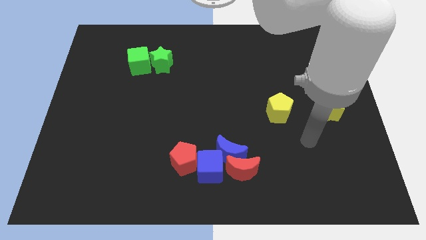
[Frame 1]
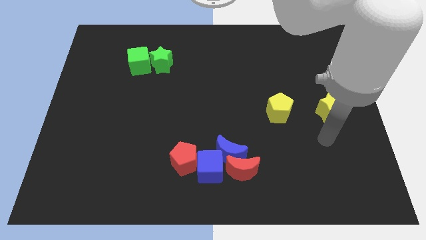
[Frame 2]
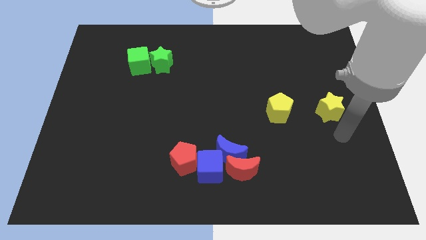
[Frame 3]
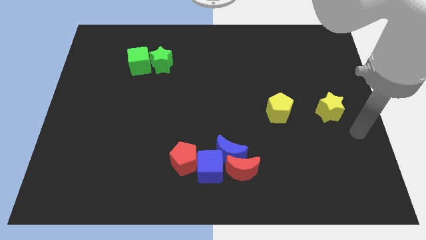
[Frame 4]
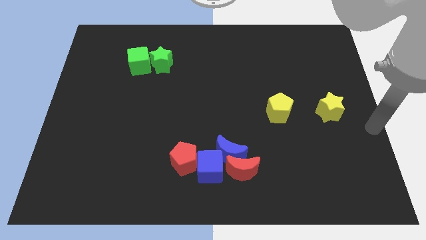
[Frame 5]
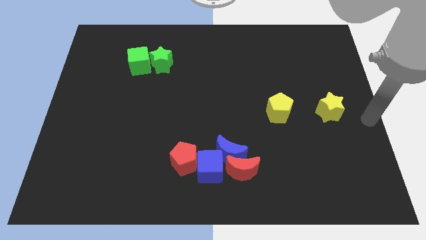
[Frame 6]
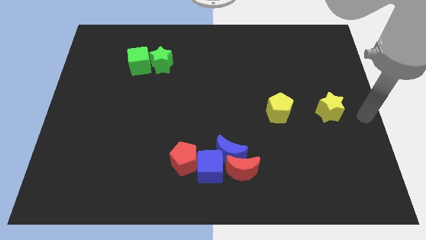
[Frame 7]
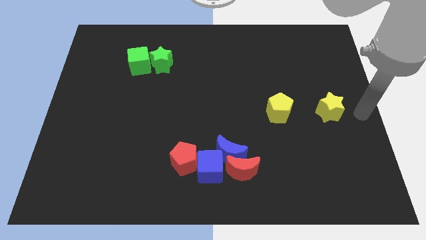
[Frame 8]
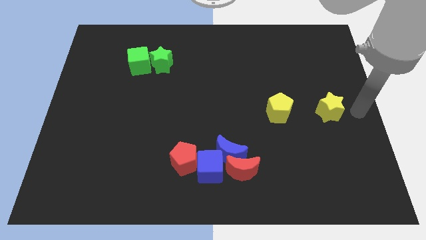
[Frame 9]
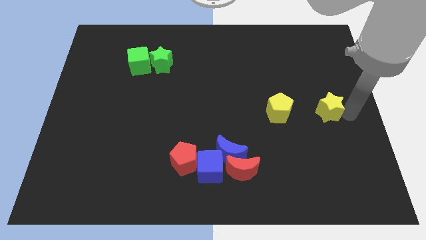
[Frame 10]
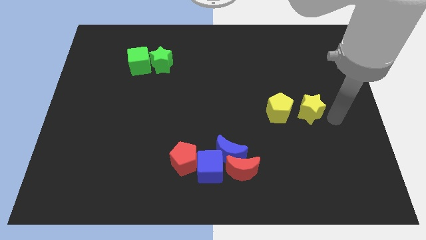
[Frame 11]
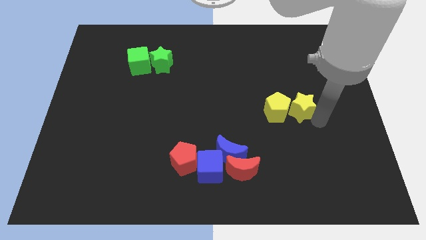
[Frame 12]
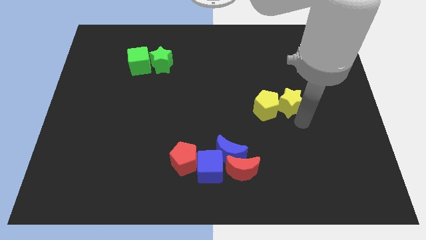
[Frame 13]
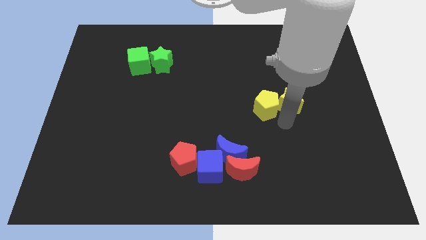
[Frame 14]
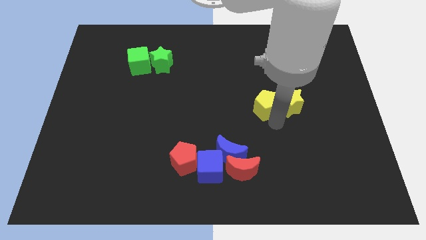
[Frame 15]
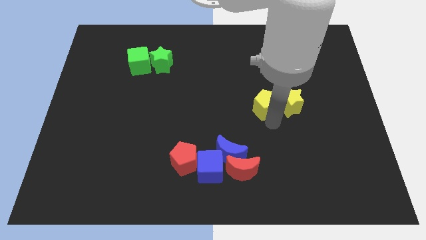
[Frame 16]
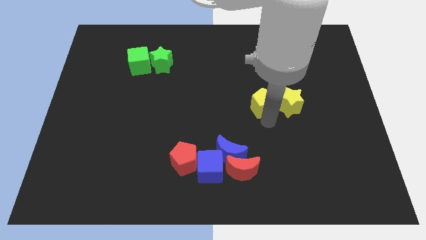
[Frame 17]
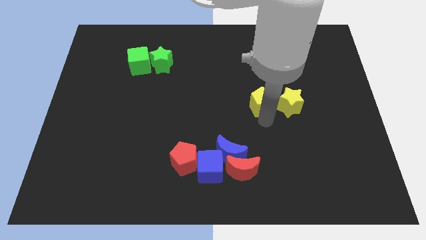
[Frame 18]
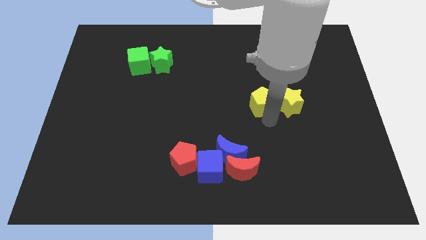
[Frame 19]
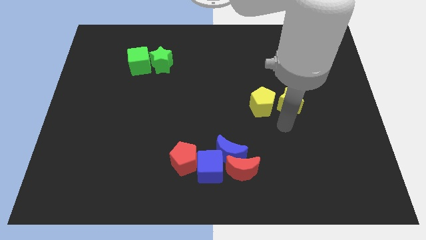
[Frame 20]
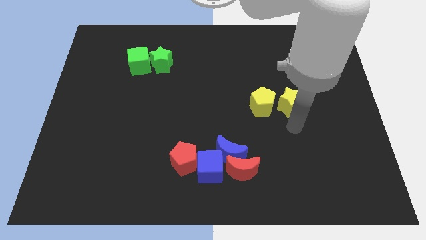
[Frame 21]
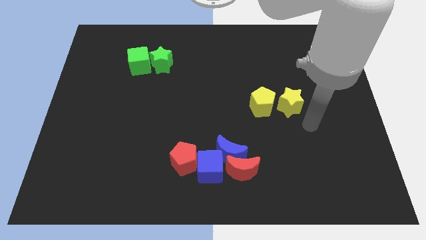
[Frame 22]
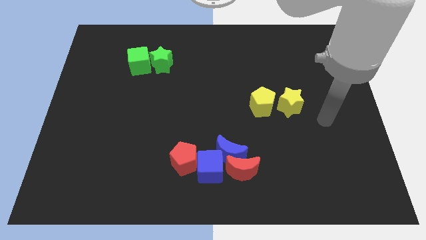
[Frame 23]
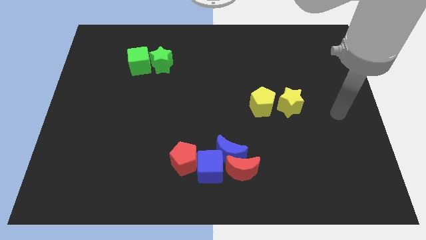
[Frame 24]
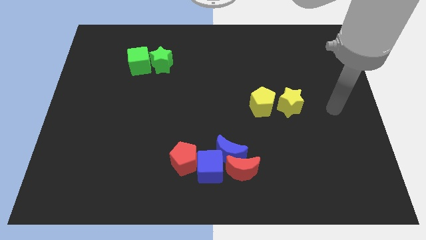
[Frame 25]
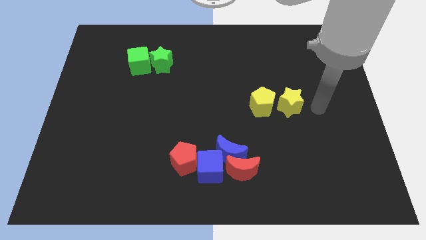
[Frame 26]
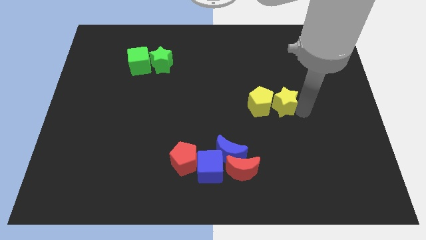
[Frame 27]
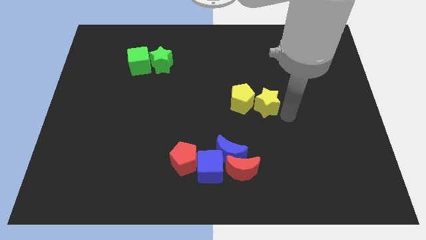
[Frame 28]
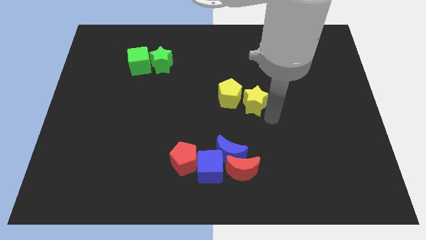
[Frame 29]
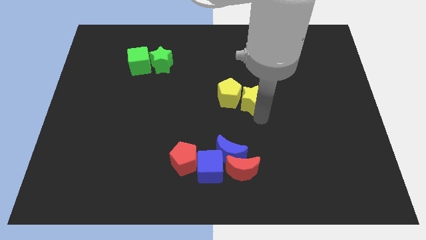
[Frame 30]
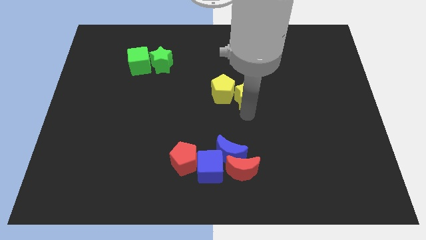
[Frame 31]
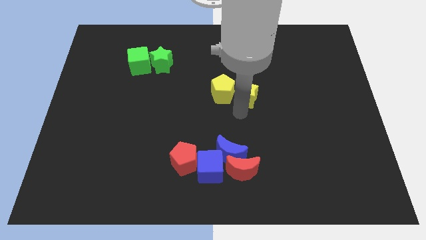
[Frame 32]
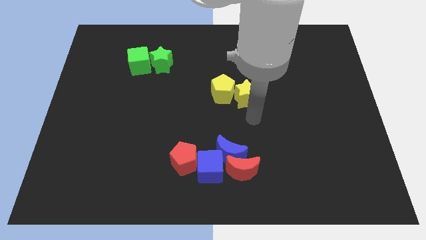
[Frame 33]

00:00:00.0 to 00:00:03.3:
place the yellow blocks together at the top side of the blue moon

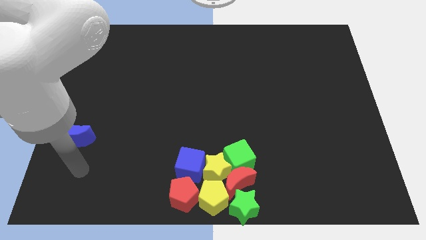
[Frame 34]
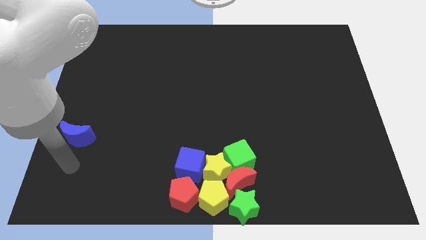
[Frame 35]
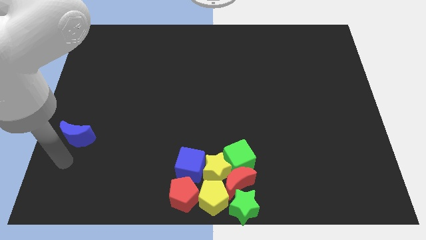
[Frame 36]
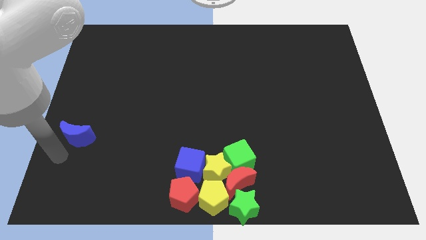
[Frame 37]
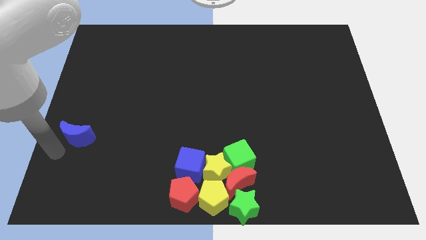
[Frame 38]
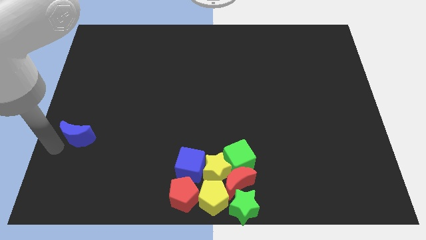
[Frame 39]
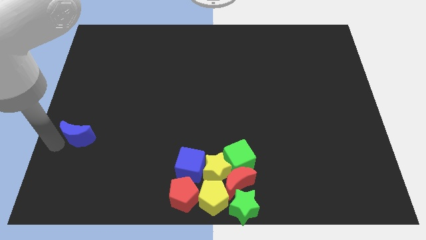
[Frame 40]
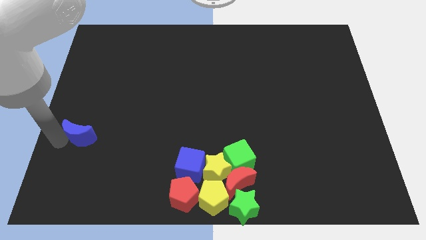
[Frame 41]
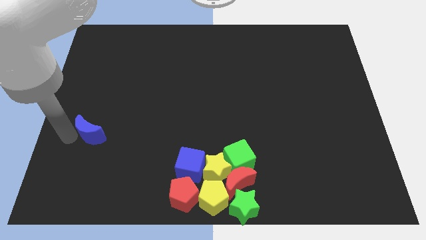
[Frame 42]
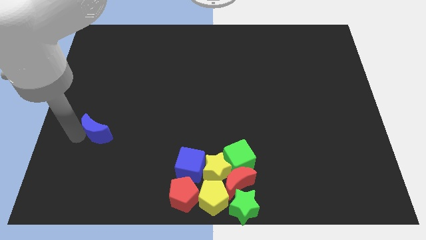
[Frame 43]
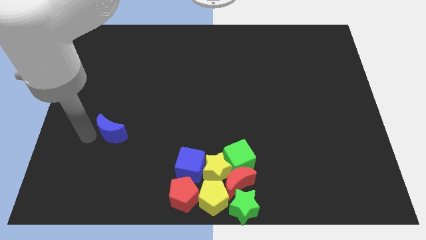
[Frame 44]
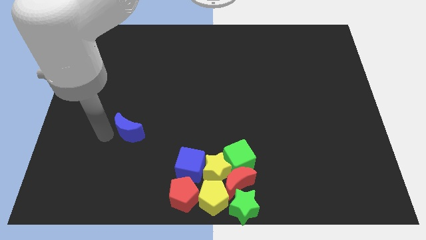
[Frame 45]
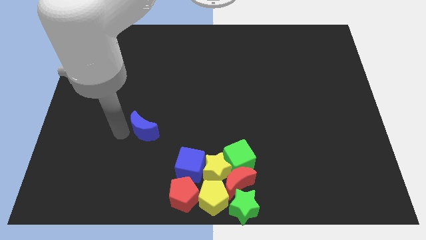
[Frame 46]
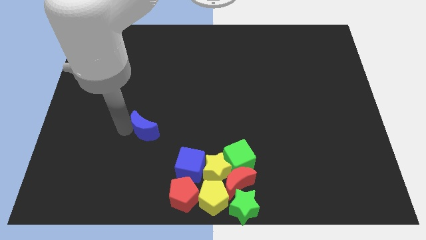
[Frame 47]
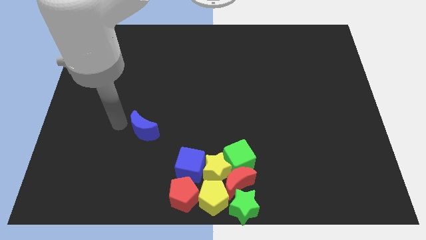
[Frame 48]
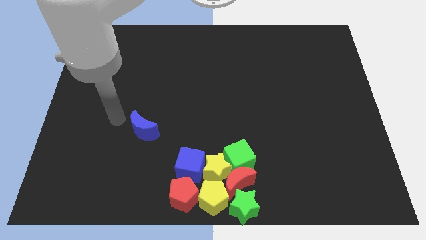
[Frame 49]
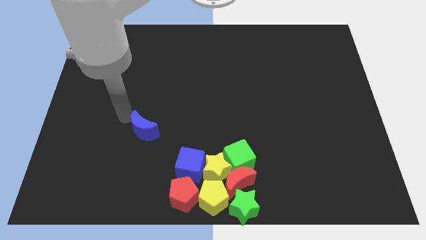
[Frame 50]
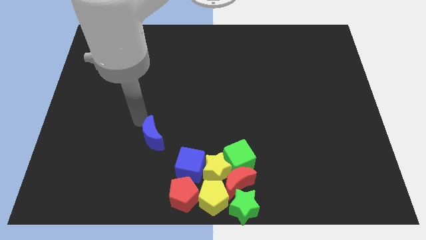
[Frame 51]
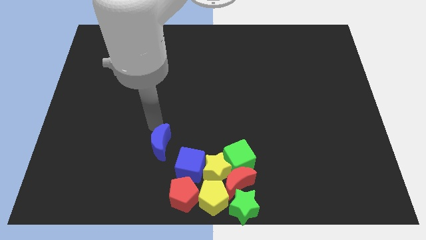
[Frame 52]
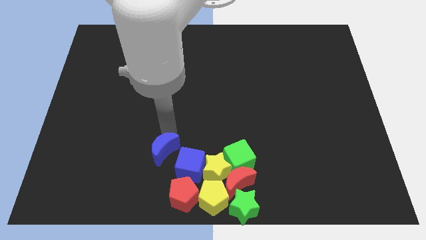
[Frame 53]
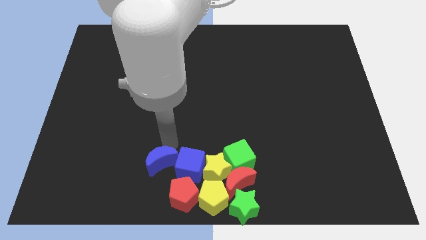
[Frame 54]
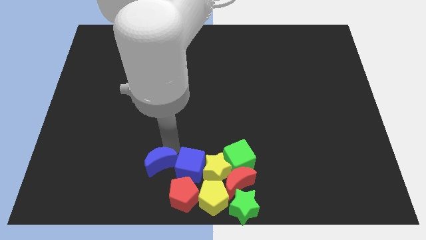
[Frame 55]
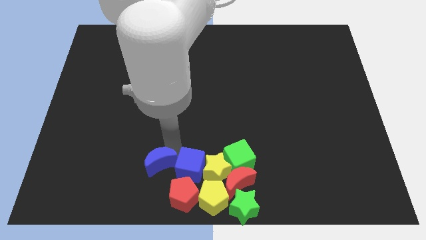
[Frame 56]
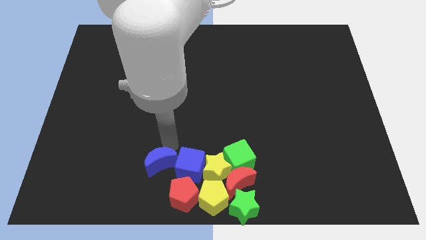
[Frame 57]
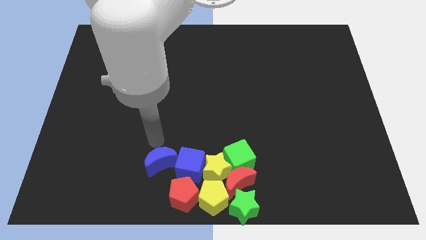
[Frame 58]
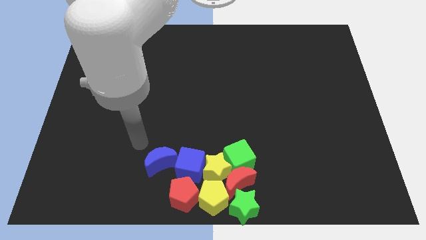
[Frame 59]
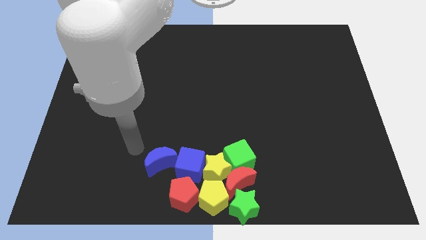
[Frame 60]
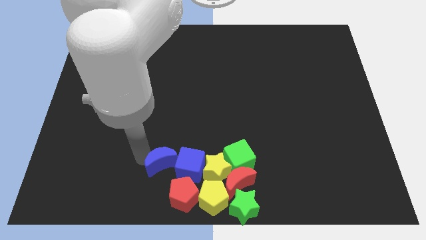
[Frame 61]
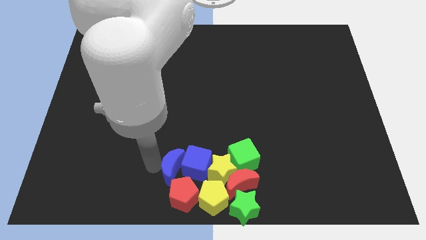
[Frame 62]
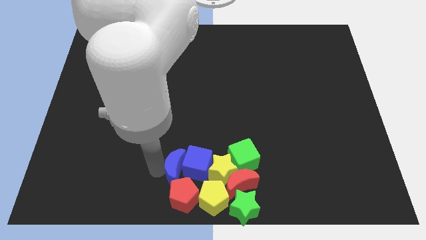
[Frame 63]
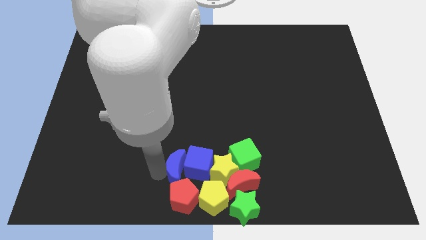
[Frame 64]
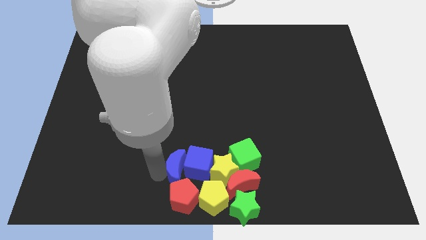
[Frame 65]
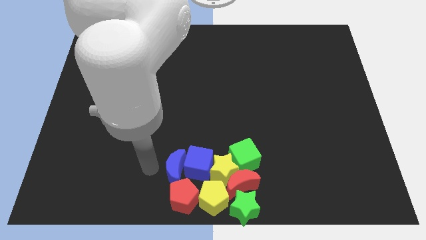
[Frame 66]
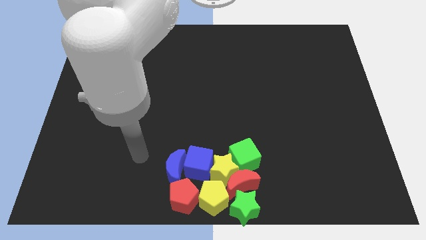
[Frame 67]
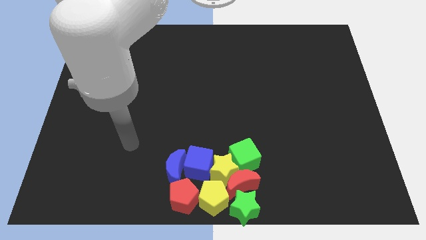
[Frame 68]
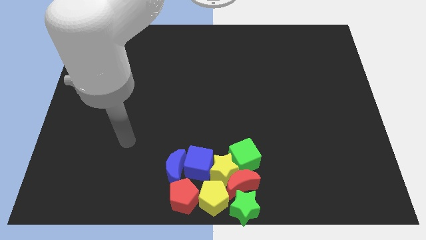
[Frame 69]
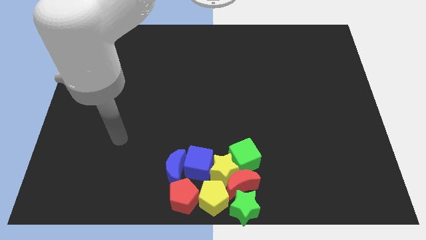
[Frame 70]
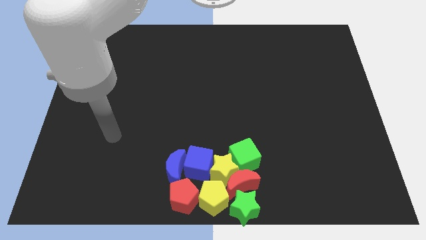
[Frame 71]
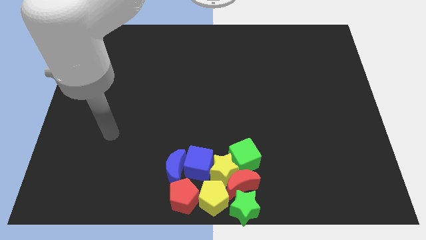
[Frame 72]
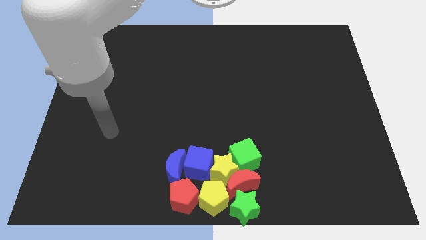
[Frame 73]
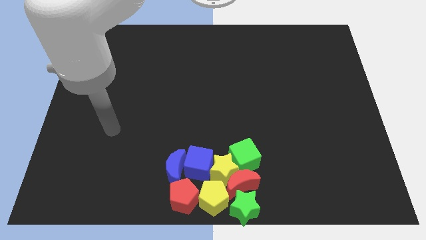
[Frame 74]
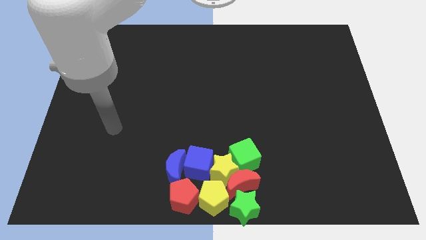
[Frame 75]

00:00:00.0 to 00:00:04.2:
place the blue crescent behind the red pentagon and blue cube

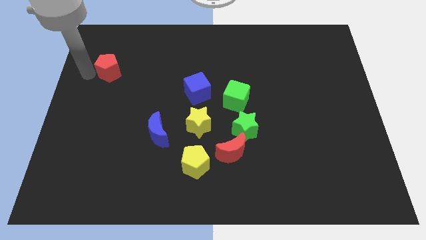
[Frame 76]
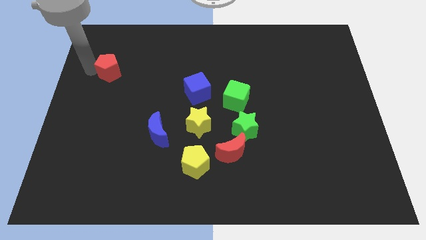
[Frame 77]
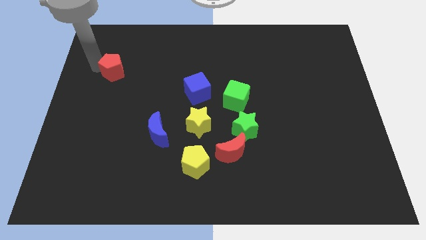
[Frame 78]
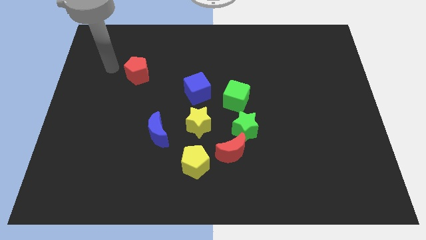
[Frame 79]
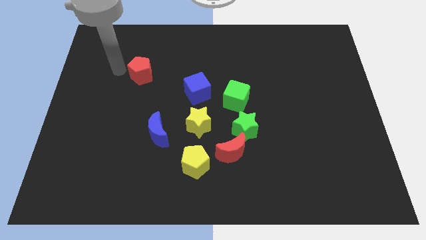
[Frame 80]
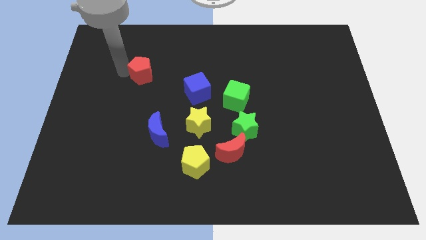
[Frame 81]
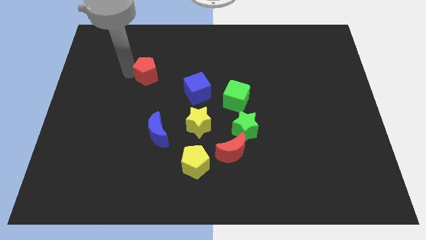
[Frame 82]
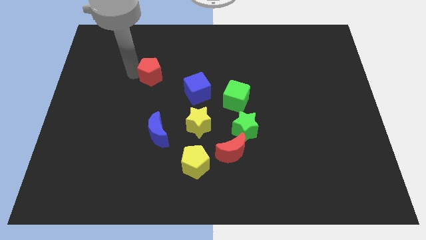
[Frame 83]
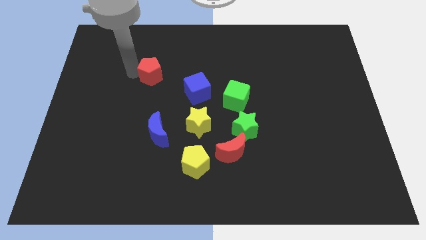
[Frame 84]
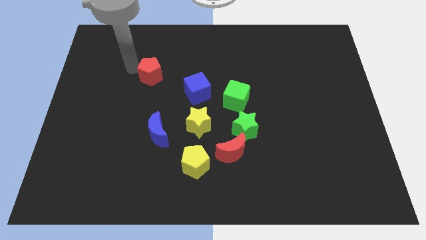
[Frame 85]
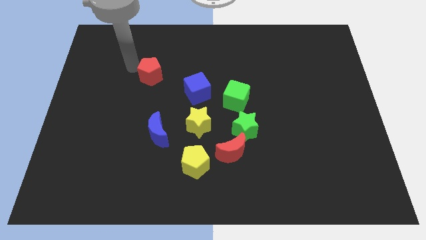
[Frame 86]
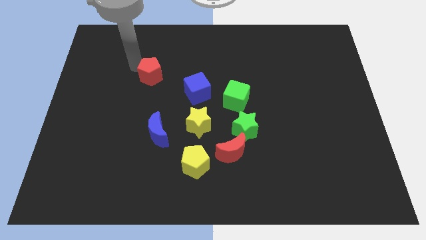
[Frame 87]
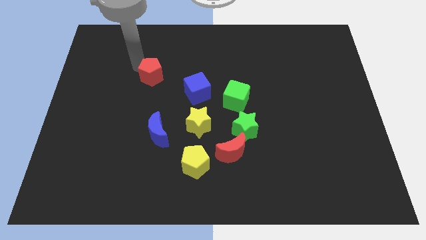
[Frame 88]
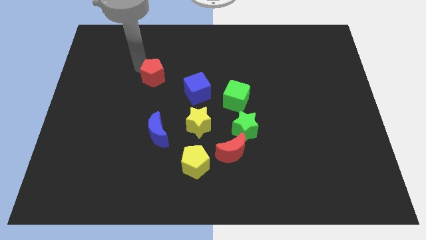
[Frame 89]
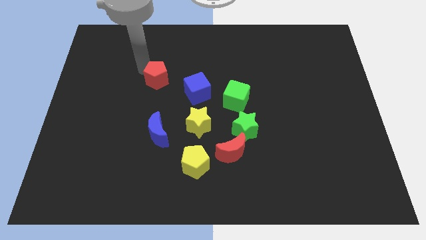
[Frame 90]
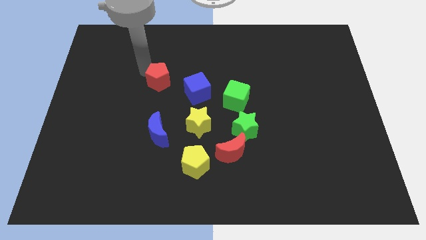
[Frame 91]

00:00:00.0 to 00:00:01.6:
place red pentagon to the top of blue moon
